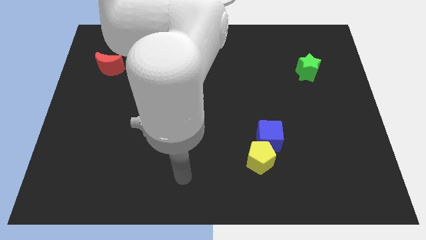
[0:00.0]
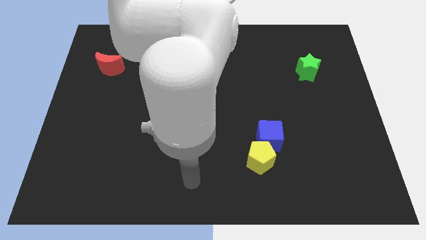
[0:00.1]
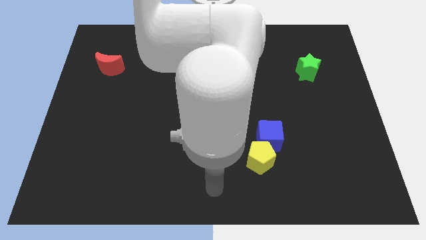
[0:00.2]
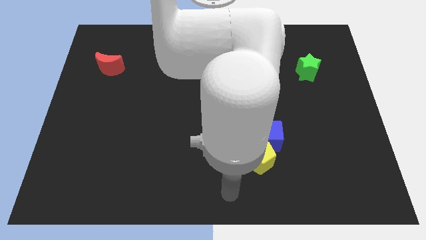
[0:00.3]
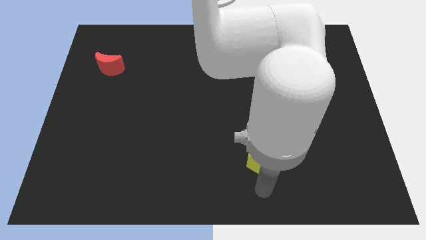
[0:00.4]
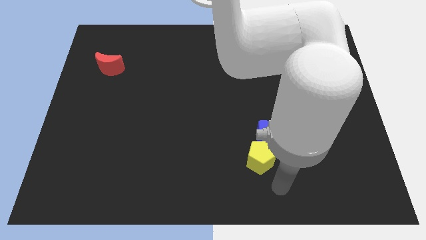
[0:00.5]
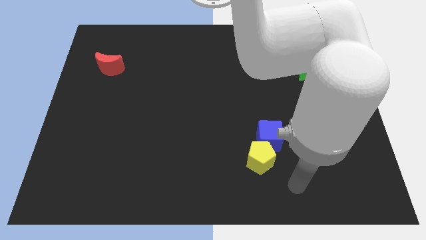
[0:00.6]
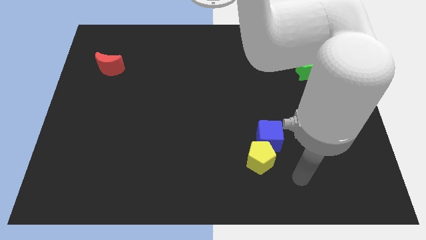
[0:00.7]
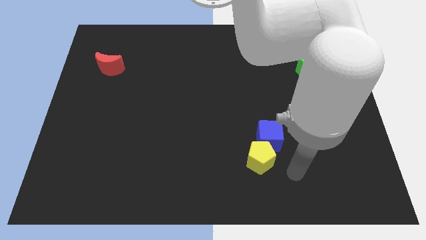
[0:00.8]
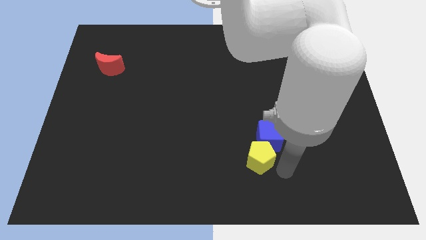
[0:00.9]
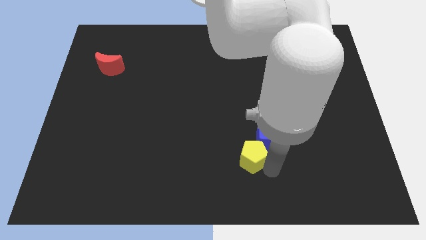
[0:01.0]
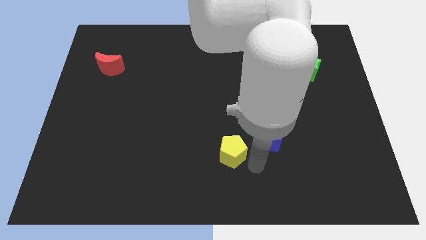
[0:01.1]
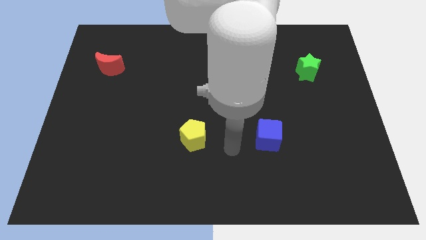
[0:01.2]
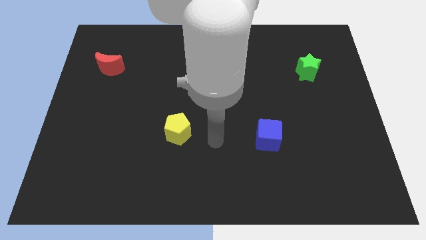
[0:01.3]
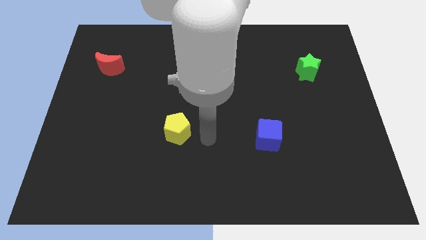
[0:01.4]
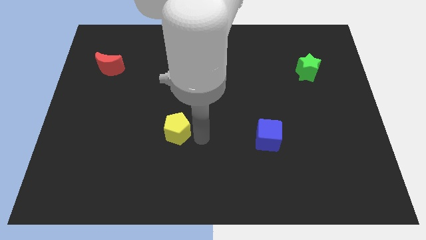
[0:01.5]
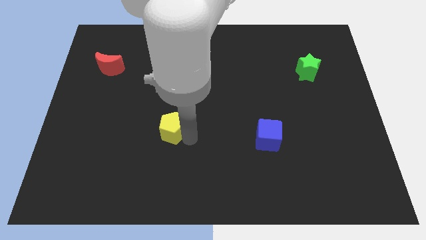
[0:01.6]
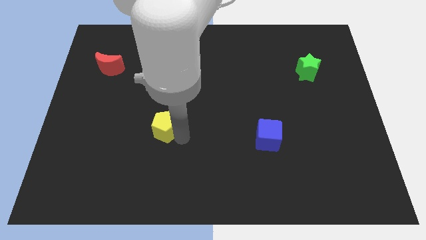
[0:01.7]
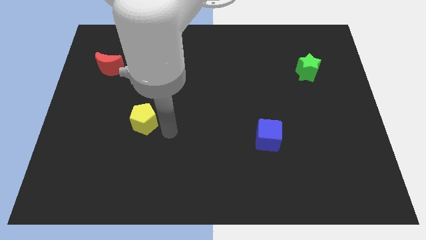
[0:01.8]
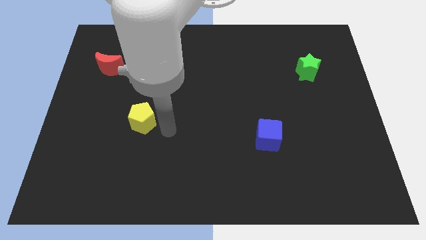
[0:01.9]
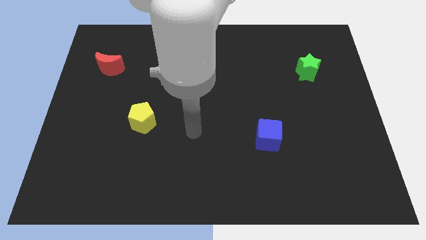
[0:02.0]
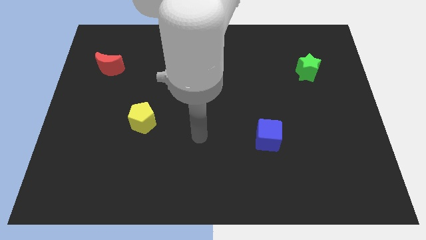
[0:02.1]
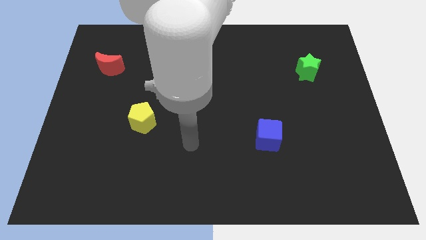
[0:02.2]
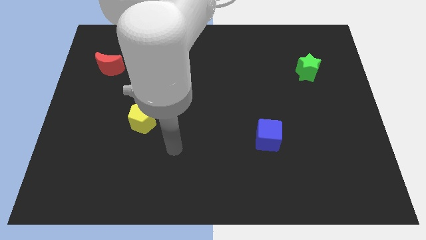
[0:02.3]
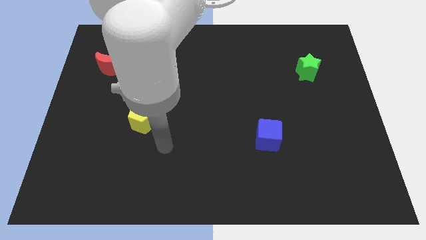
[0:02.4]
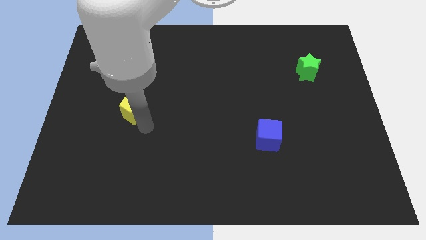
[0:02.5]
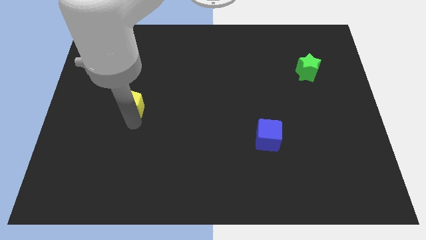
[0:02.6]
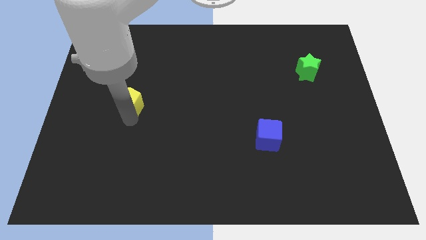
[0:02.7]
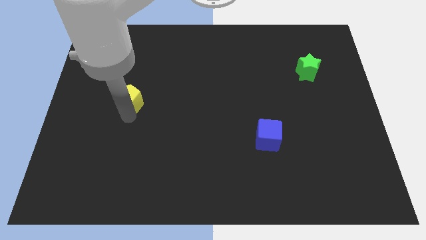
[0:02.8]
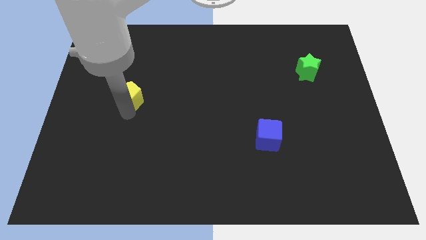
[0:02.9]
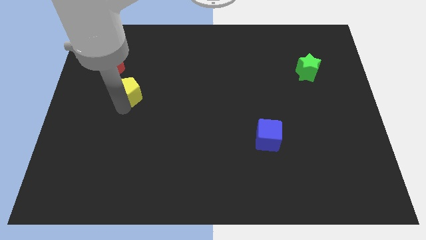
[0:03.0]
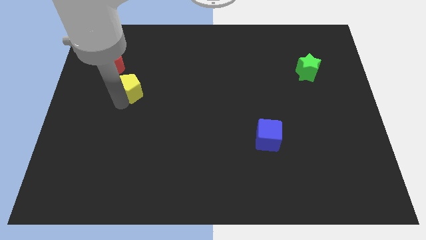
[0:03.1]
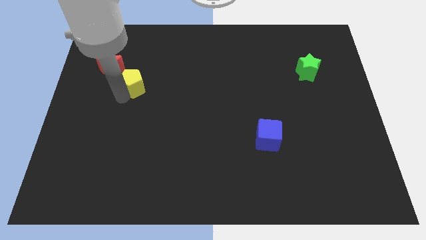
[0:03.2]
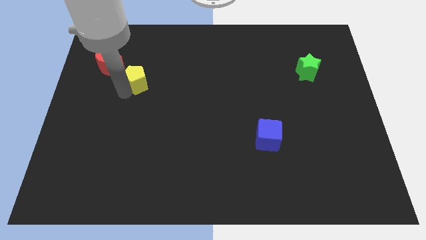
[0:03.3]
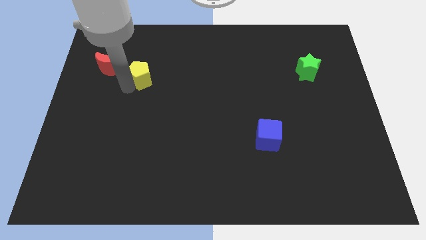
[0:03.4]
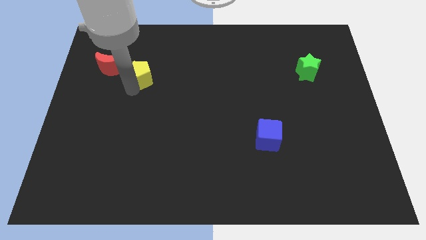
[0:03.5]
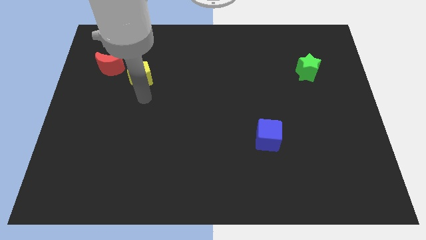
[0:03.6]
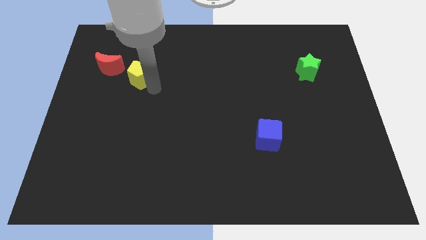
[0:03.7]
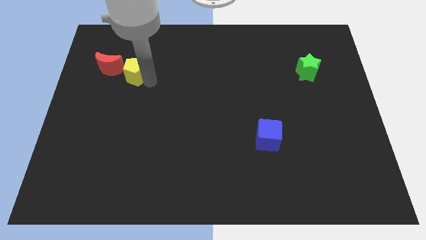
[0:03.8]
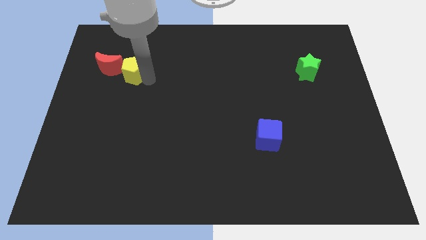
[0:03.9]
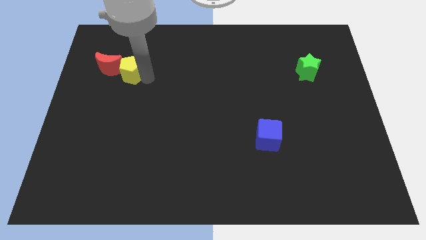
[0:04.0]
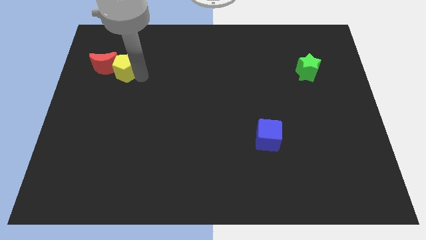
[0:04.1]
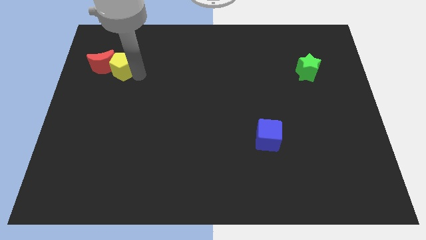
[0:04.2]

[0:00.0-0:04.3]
push the pentagon close to the red moon

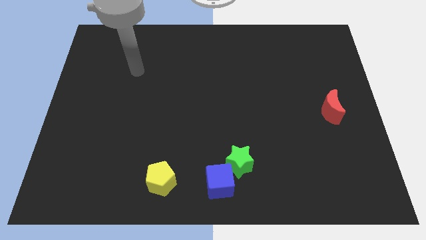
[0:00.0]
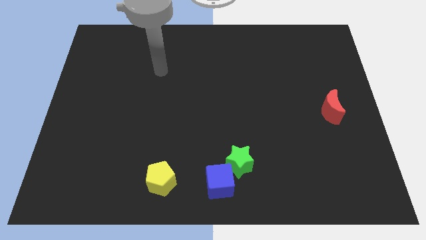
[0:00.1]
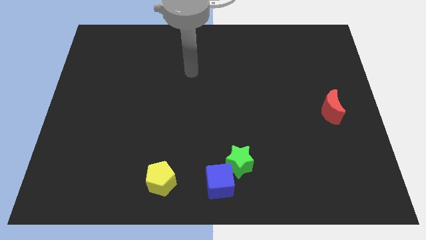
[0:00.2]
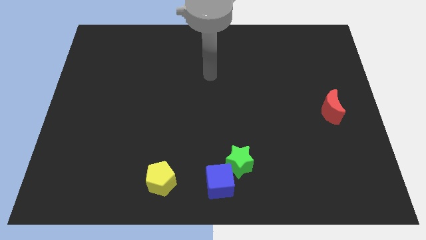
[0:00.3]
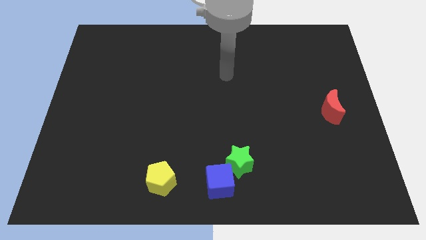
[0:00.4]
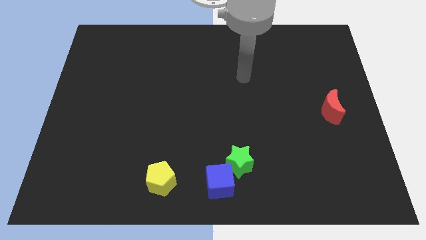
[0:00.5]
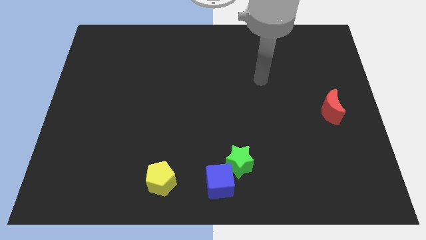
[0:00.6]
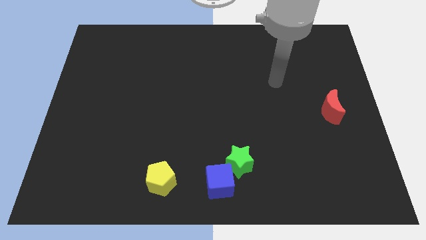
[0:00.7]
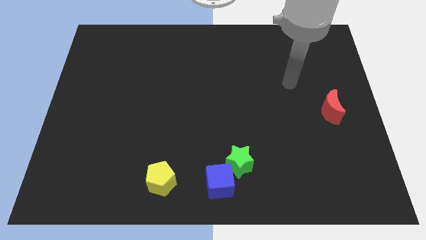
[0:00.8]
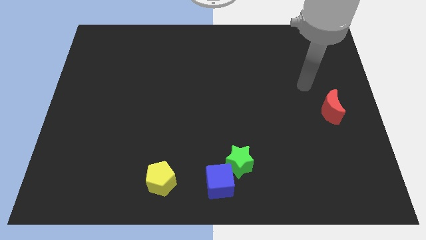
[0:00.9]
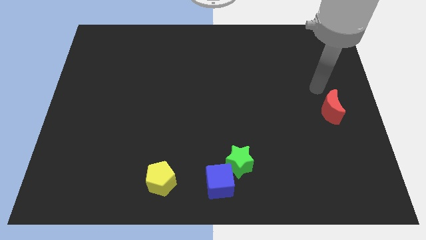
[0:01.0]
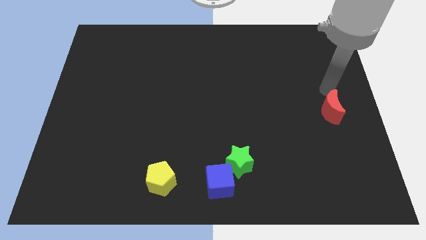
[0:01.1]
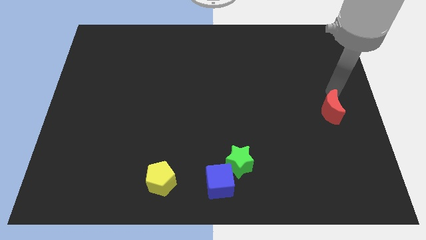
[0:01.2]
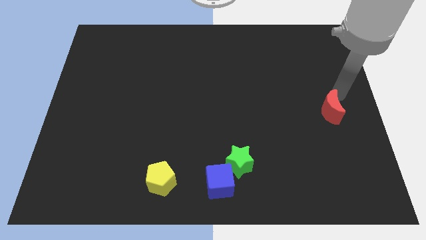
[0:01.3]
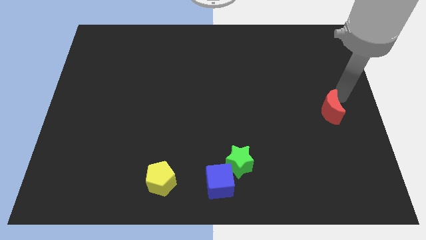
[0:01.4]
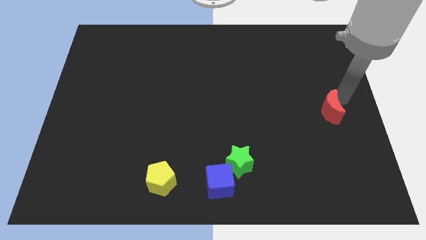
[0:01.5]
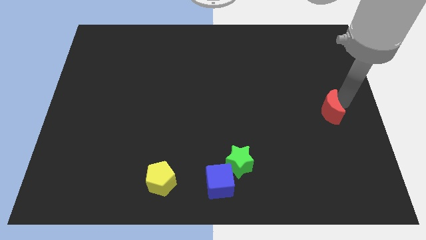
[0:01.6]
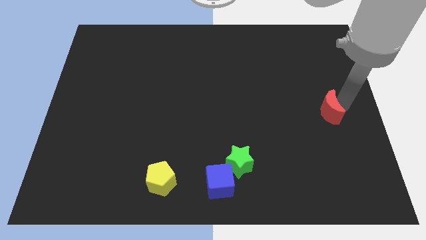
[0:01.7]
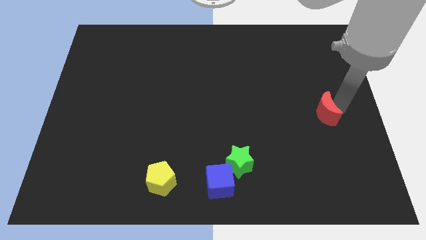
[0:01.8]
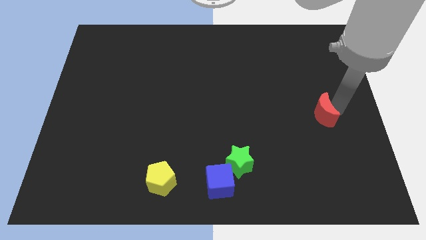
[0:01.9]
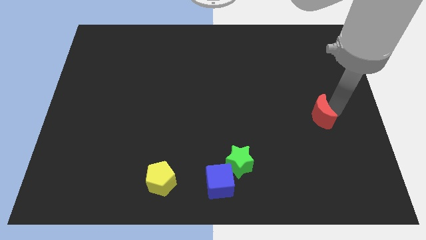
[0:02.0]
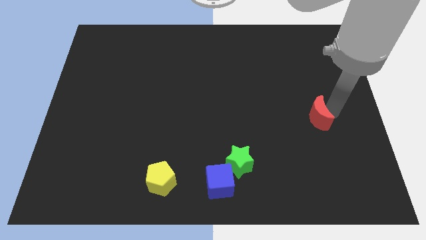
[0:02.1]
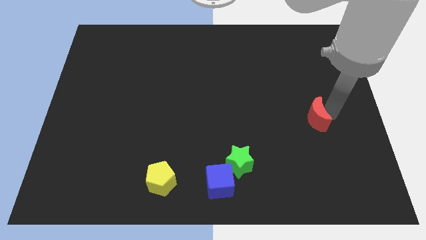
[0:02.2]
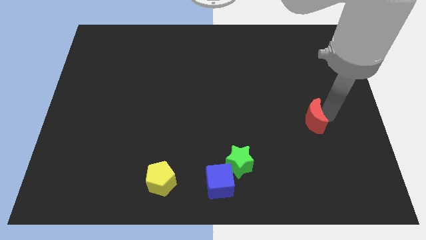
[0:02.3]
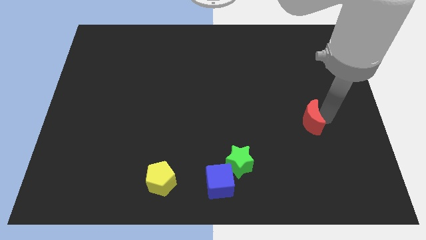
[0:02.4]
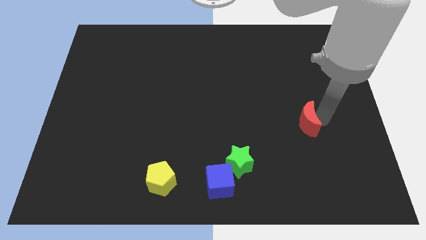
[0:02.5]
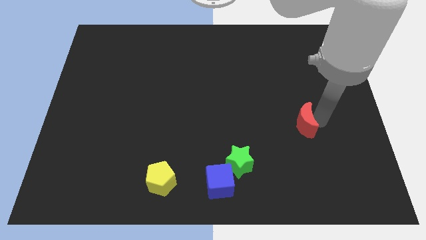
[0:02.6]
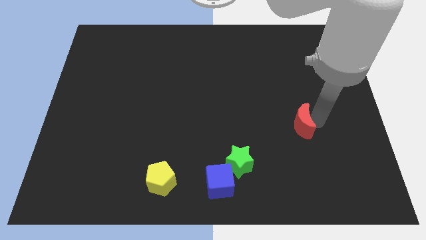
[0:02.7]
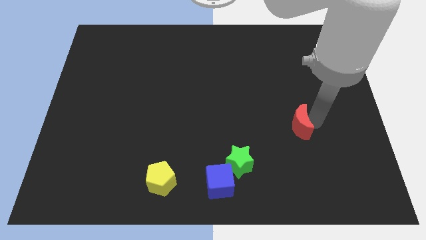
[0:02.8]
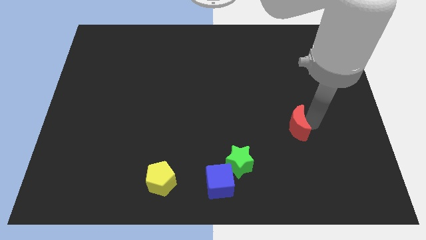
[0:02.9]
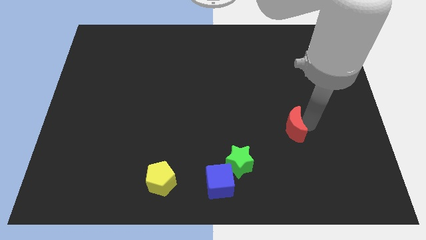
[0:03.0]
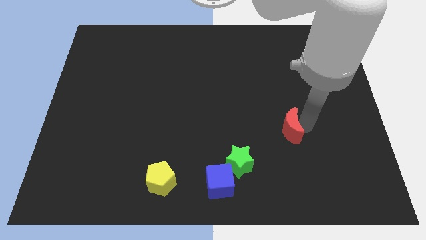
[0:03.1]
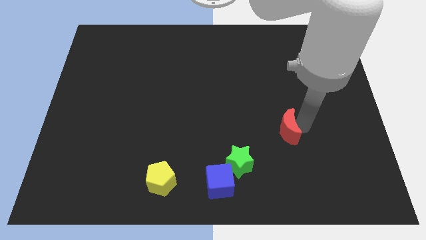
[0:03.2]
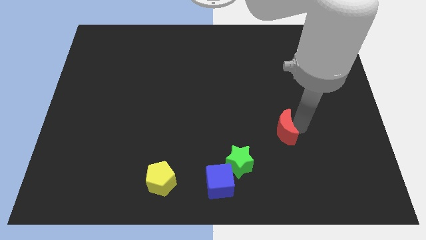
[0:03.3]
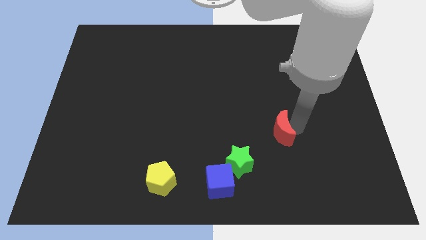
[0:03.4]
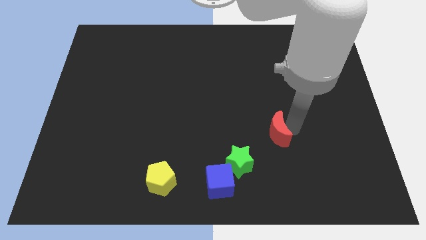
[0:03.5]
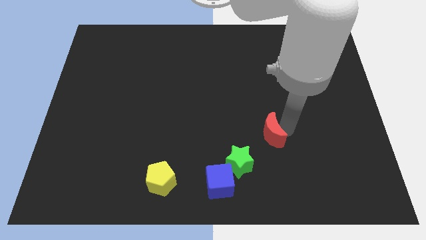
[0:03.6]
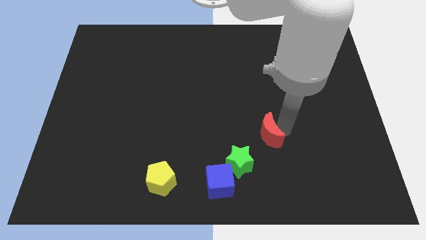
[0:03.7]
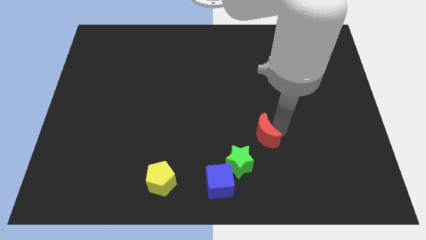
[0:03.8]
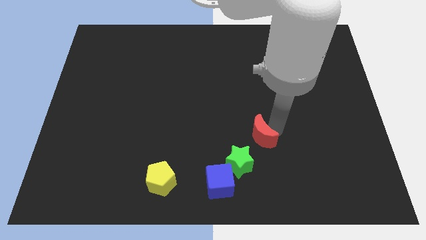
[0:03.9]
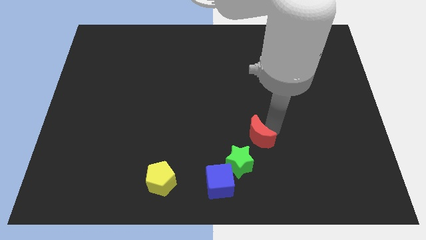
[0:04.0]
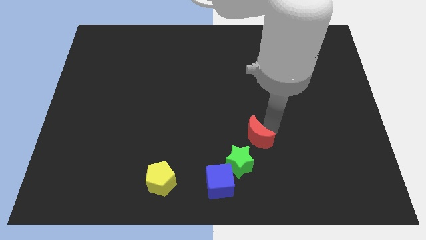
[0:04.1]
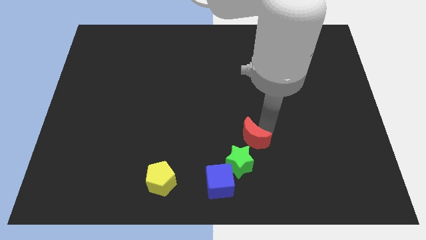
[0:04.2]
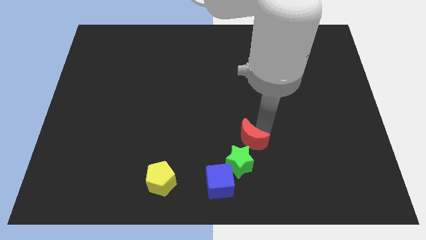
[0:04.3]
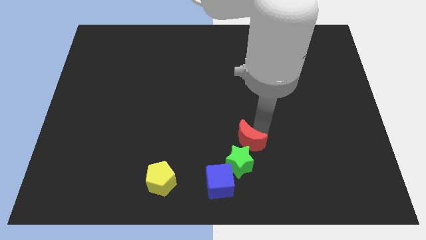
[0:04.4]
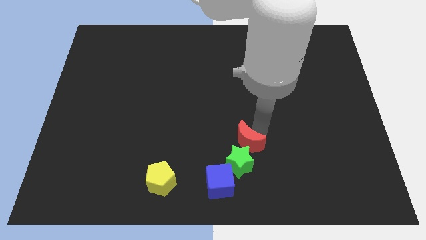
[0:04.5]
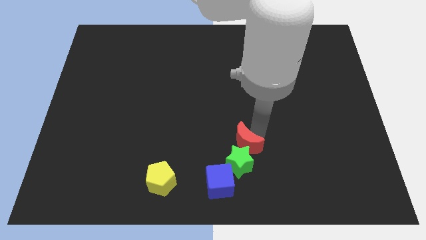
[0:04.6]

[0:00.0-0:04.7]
put the red moon towards the green star
